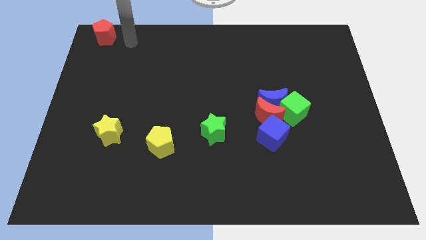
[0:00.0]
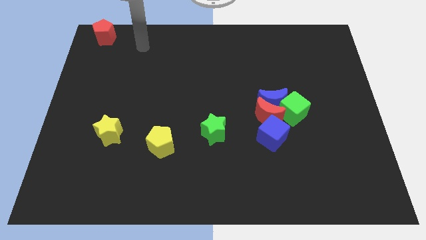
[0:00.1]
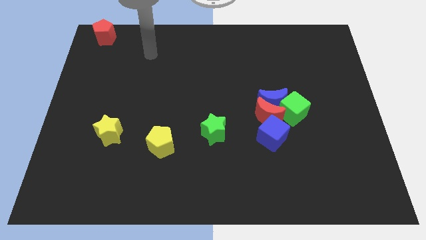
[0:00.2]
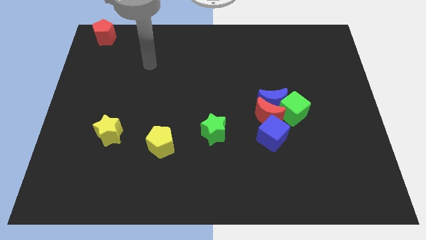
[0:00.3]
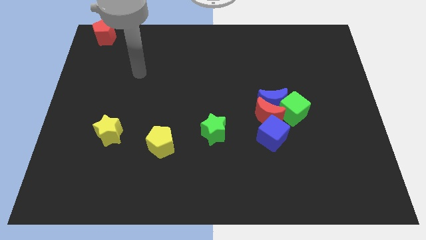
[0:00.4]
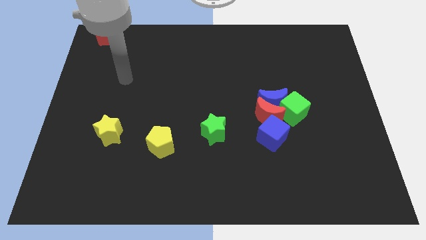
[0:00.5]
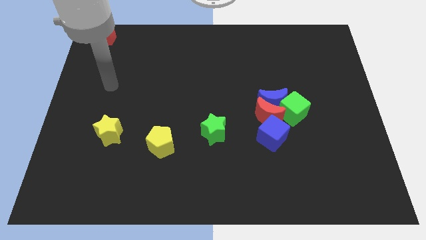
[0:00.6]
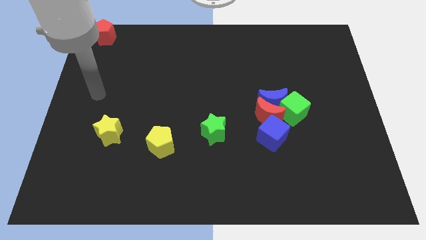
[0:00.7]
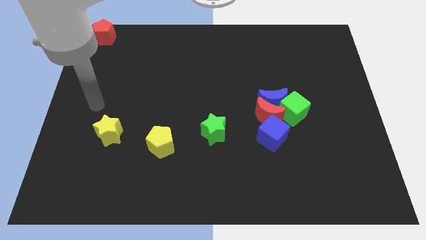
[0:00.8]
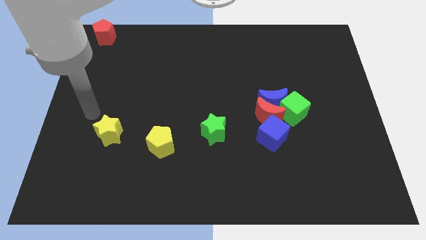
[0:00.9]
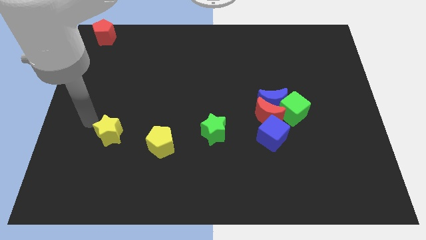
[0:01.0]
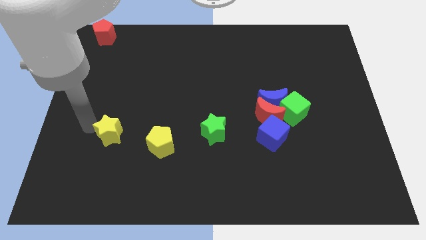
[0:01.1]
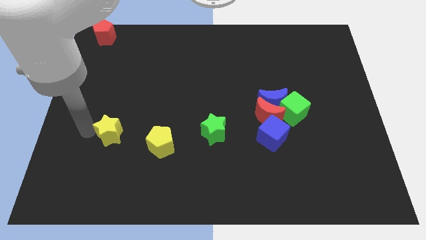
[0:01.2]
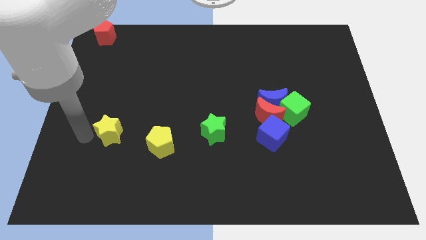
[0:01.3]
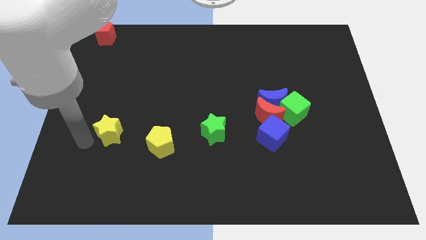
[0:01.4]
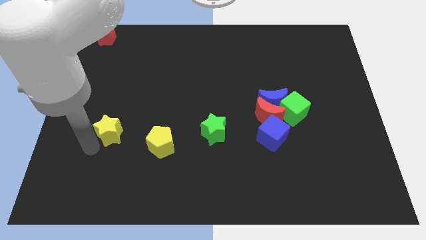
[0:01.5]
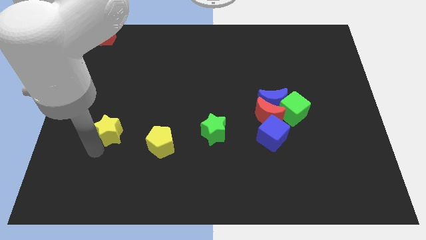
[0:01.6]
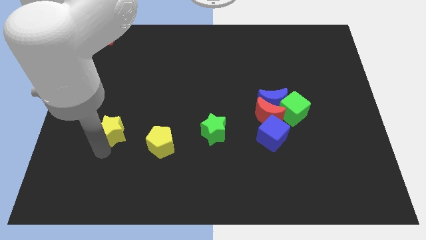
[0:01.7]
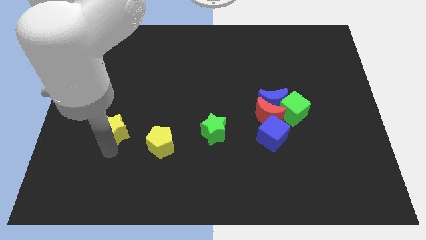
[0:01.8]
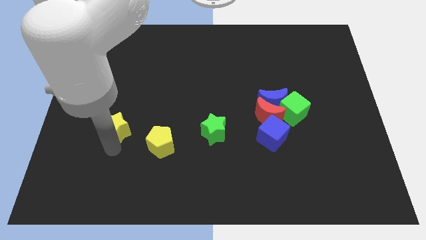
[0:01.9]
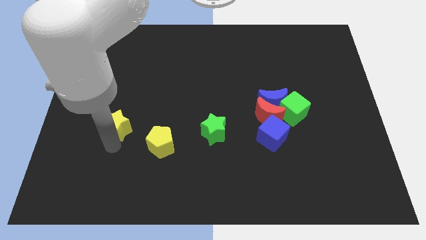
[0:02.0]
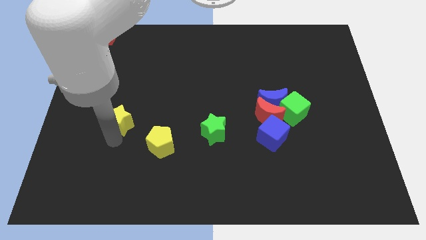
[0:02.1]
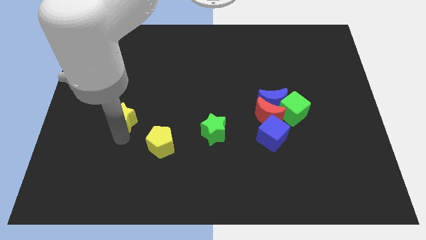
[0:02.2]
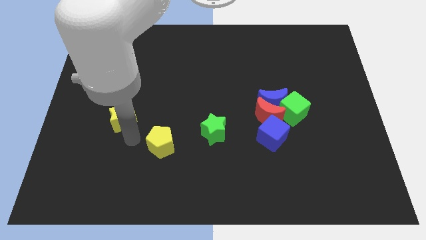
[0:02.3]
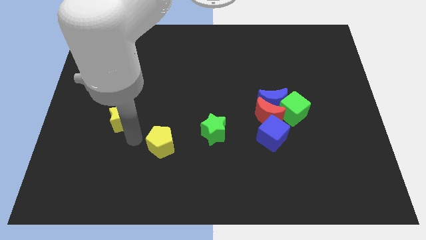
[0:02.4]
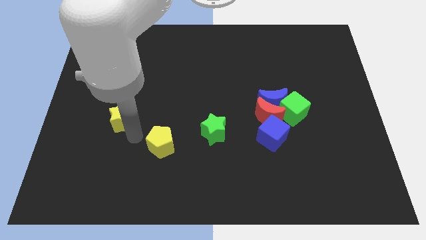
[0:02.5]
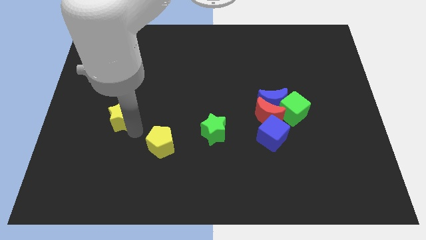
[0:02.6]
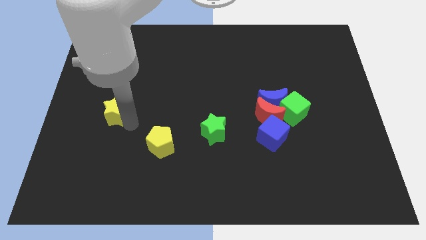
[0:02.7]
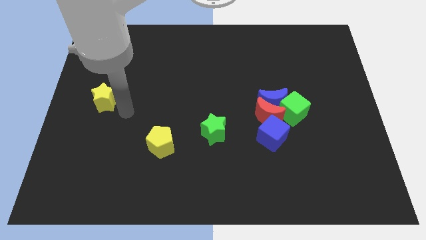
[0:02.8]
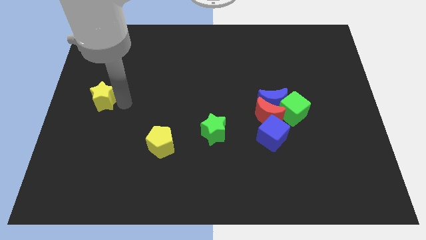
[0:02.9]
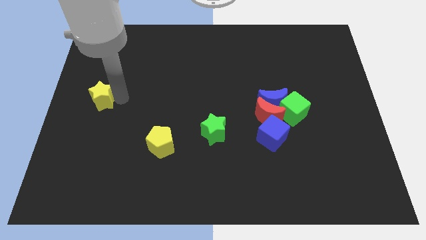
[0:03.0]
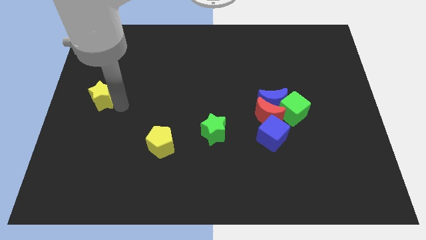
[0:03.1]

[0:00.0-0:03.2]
move the yellow star towards red pentagon

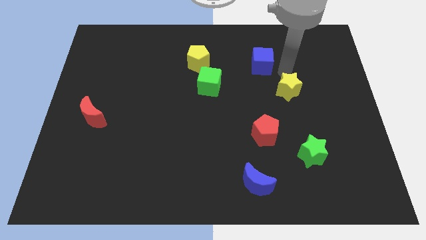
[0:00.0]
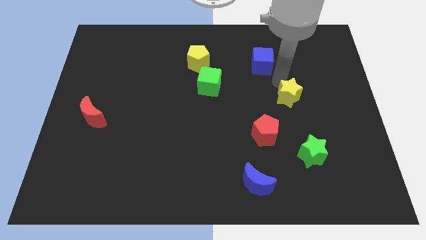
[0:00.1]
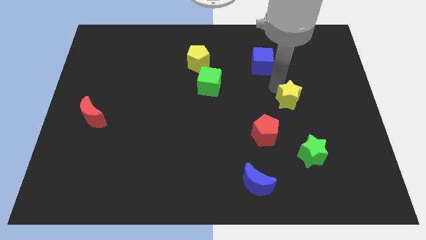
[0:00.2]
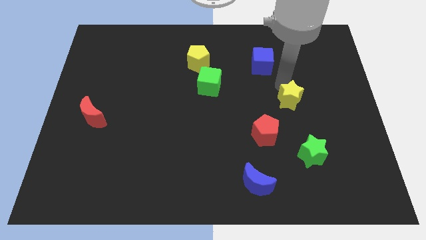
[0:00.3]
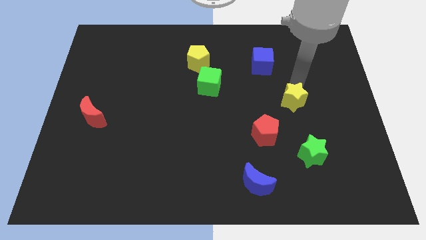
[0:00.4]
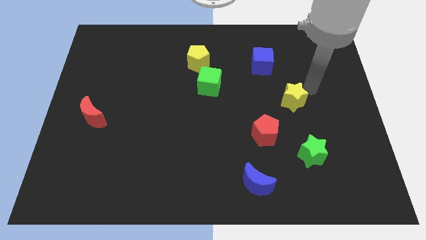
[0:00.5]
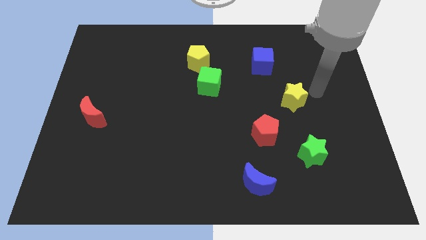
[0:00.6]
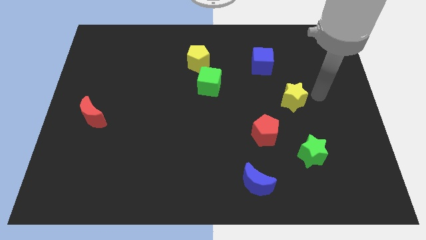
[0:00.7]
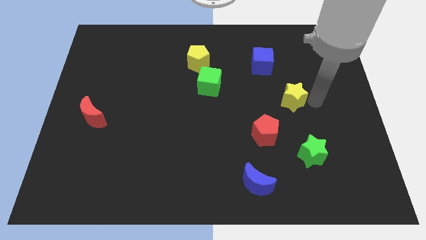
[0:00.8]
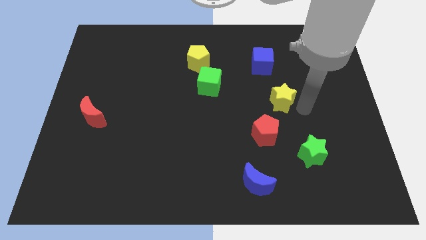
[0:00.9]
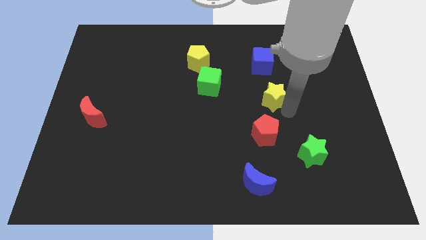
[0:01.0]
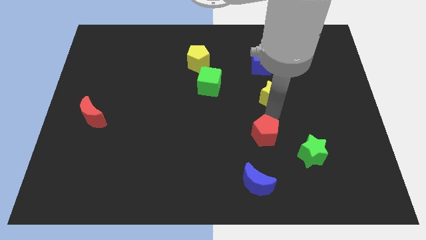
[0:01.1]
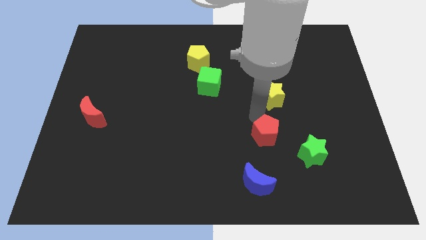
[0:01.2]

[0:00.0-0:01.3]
move the yellow star to the top side of the red pentagon

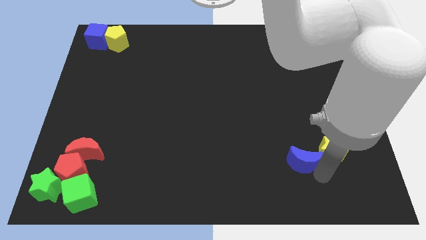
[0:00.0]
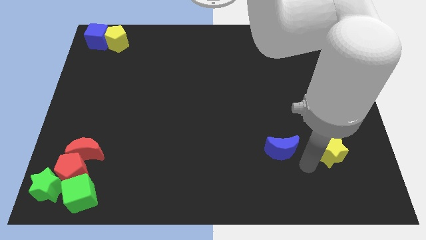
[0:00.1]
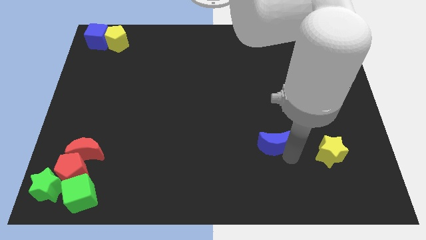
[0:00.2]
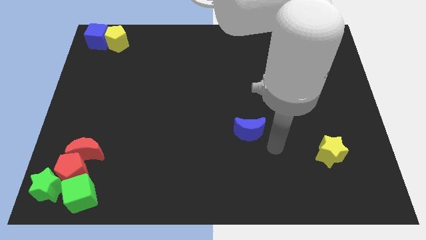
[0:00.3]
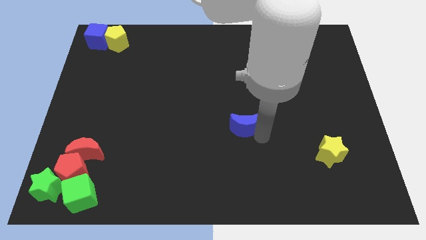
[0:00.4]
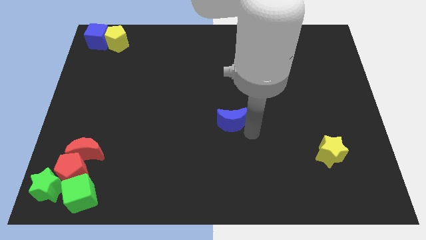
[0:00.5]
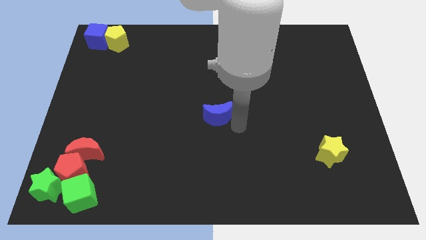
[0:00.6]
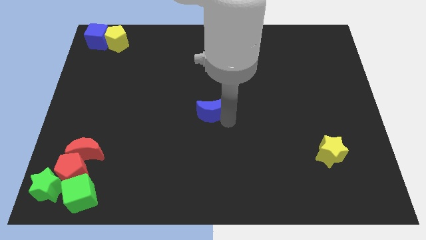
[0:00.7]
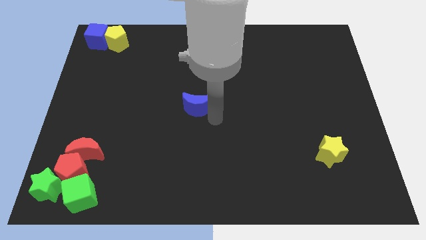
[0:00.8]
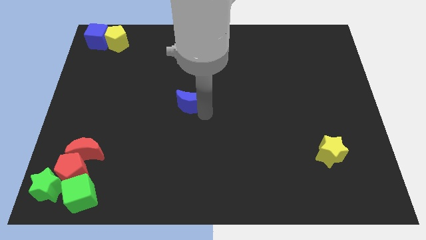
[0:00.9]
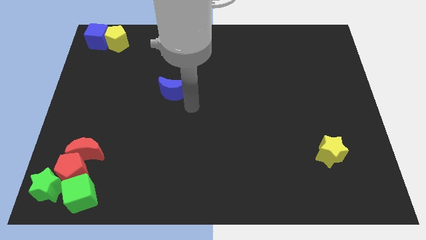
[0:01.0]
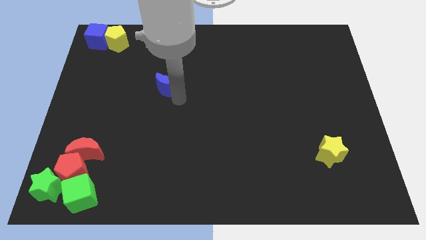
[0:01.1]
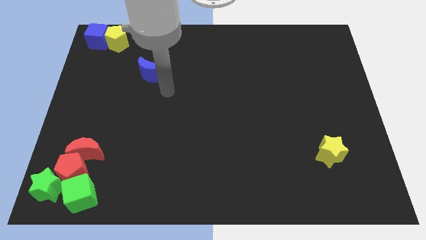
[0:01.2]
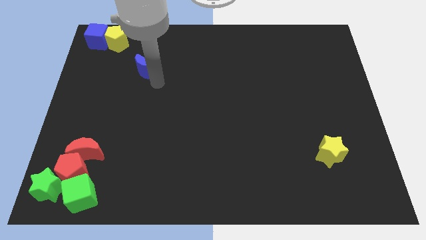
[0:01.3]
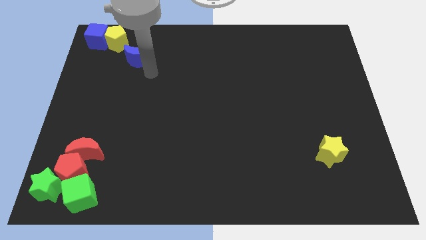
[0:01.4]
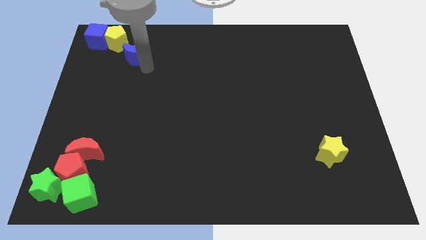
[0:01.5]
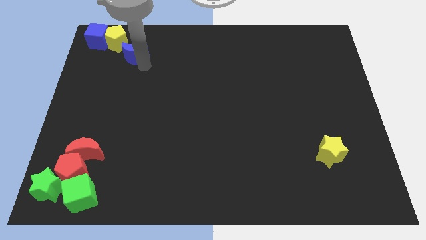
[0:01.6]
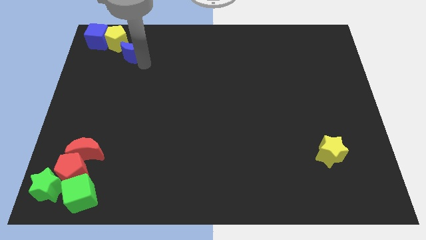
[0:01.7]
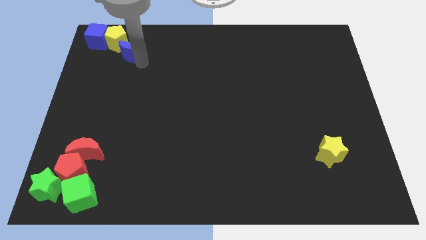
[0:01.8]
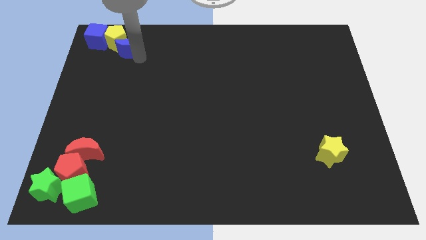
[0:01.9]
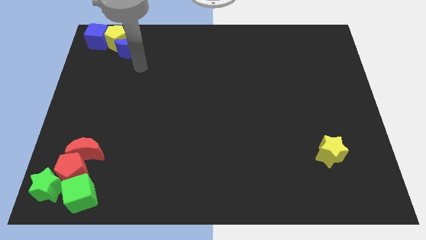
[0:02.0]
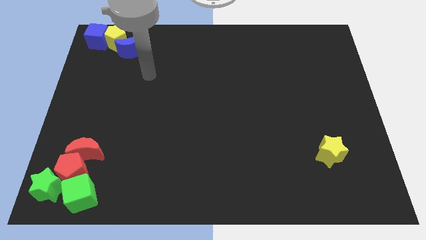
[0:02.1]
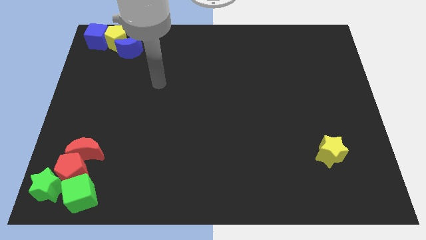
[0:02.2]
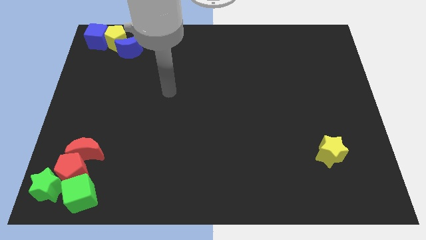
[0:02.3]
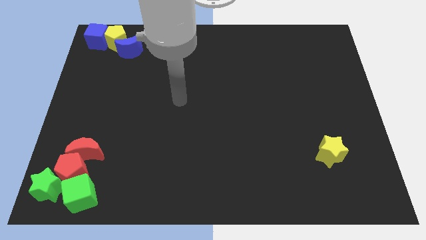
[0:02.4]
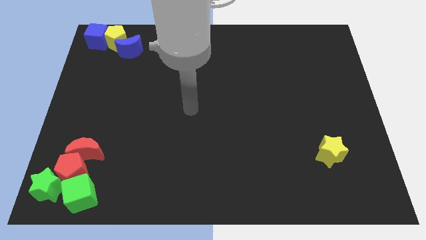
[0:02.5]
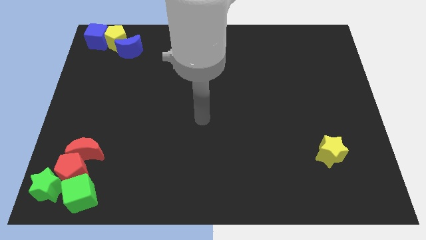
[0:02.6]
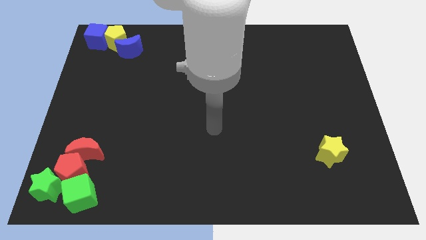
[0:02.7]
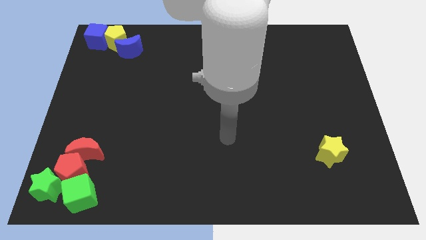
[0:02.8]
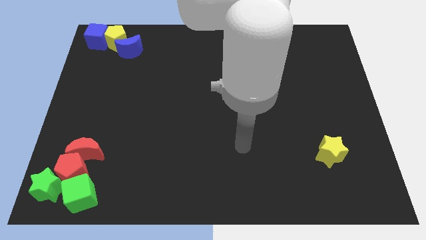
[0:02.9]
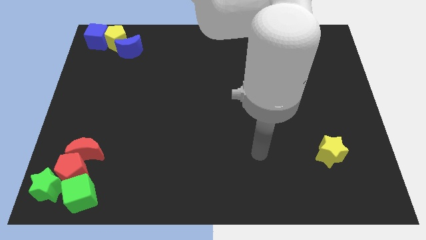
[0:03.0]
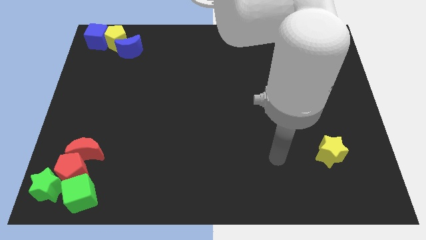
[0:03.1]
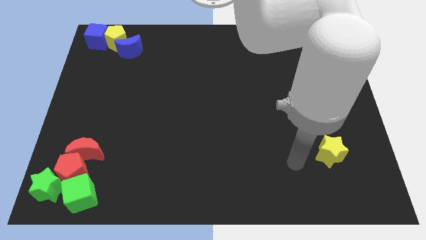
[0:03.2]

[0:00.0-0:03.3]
push the blue crescent to the top left of the board

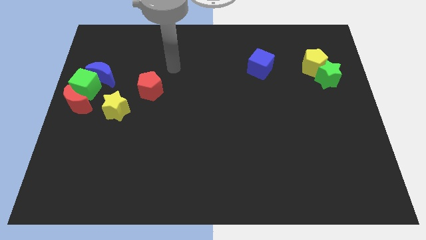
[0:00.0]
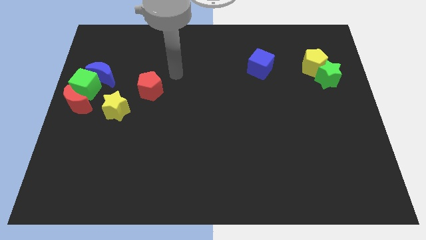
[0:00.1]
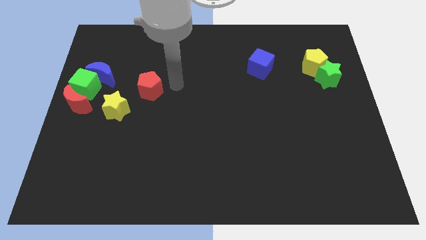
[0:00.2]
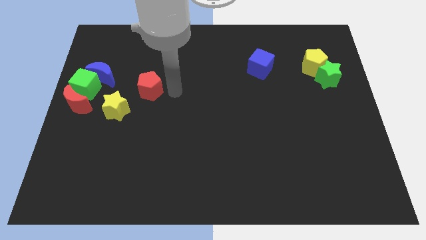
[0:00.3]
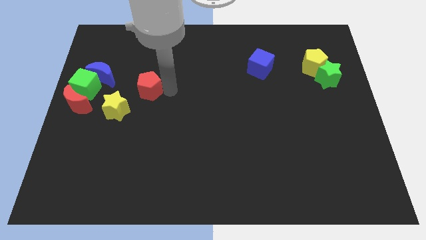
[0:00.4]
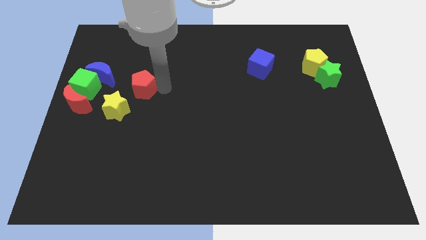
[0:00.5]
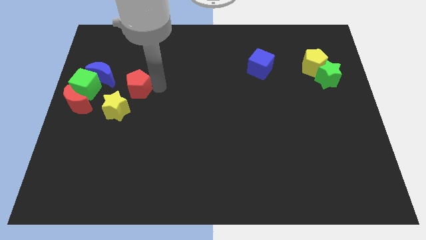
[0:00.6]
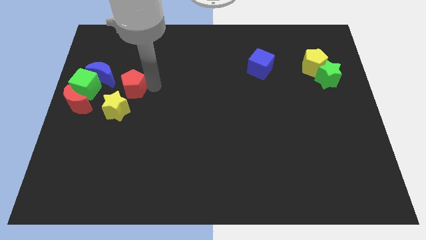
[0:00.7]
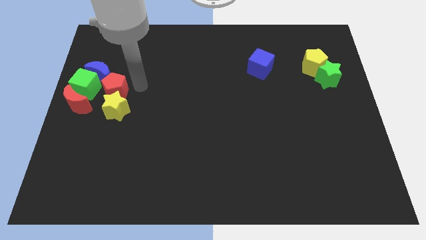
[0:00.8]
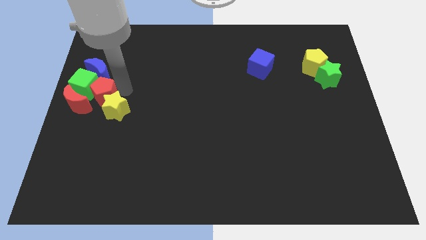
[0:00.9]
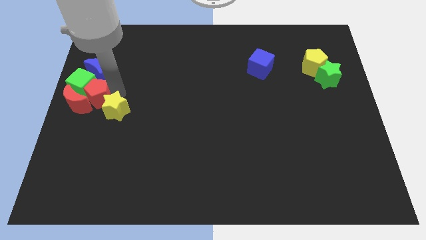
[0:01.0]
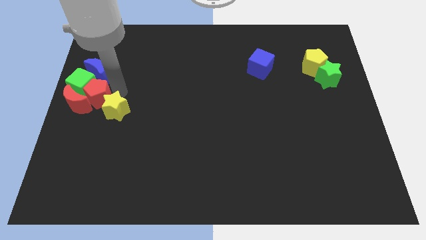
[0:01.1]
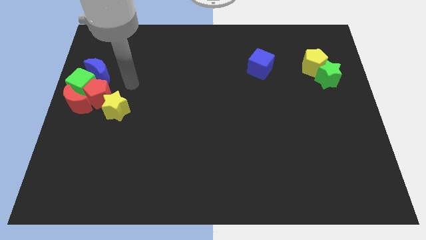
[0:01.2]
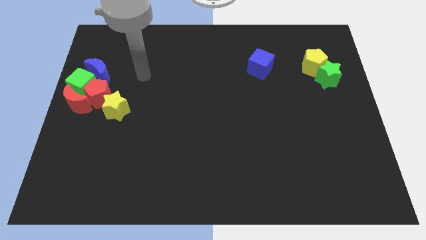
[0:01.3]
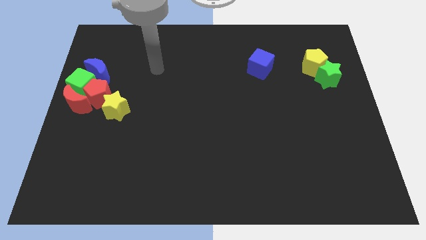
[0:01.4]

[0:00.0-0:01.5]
move the red pentagon into the green cube
